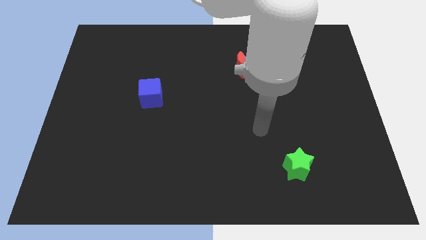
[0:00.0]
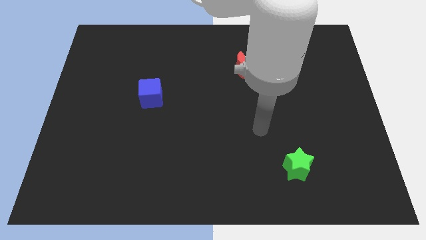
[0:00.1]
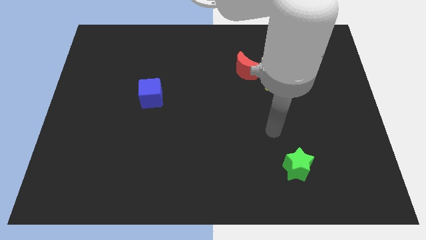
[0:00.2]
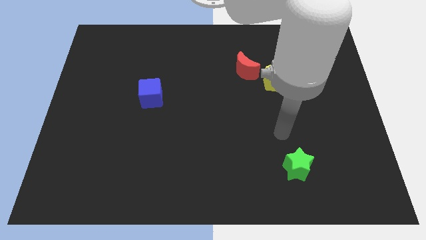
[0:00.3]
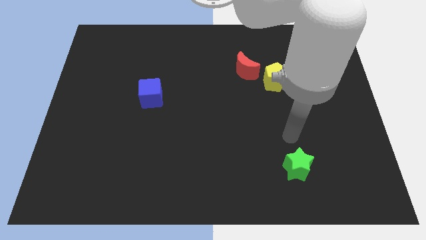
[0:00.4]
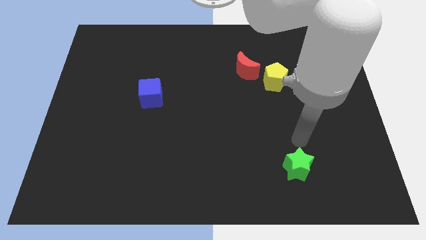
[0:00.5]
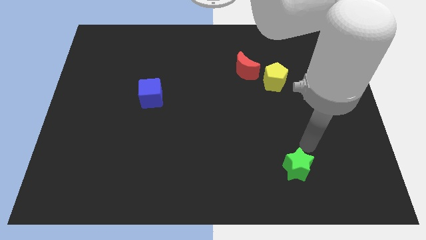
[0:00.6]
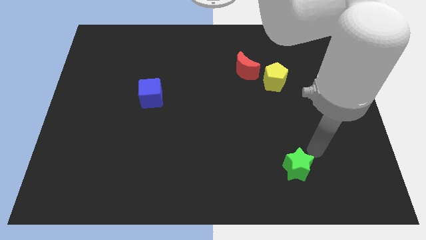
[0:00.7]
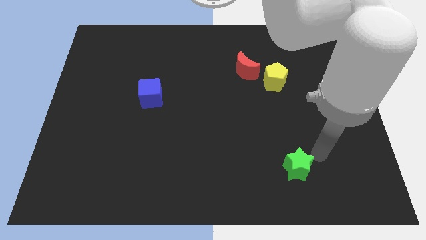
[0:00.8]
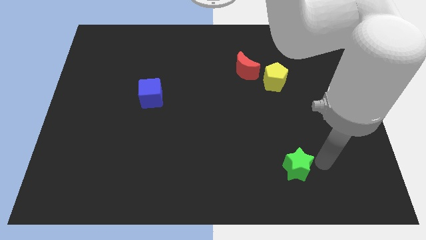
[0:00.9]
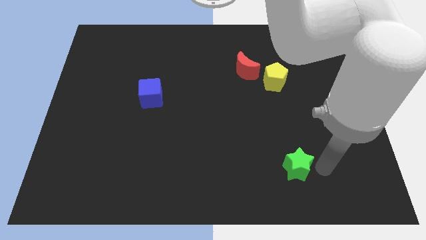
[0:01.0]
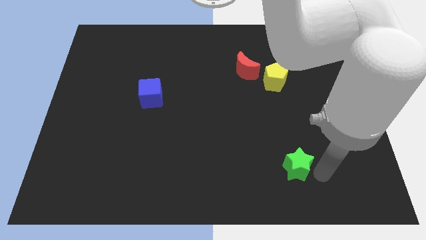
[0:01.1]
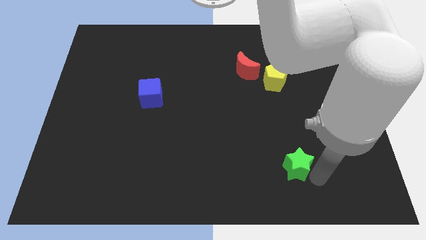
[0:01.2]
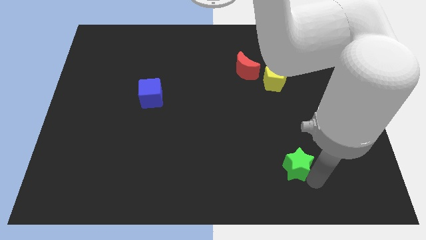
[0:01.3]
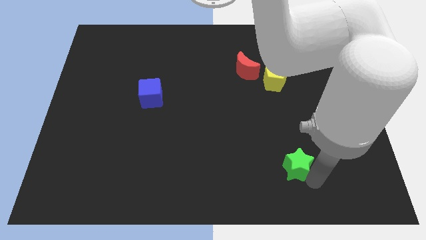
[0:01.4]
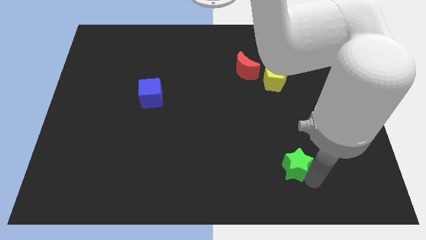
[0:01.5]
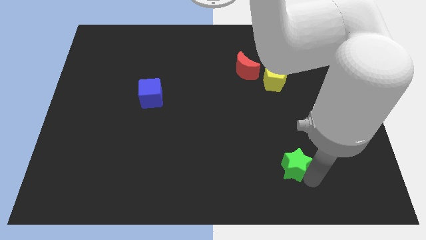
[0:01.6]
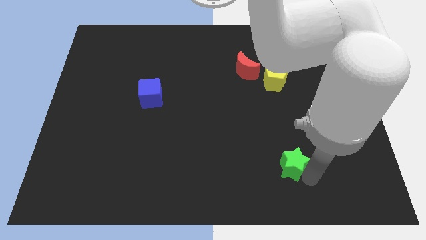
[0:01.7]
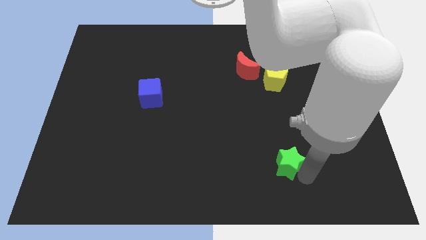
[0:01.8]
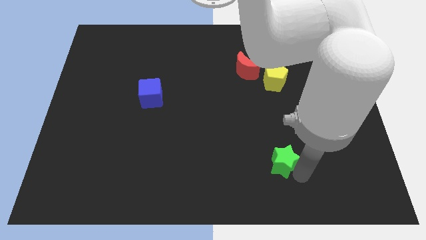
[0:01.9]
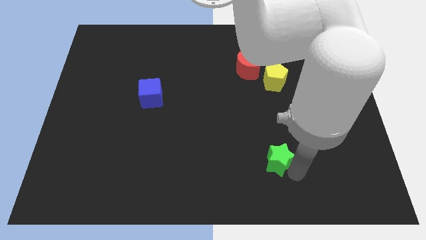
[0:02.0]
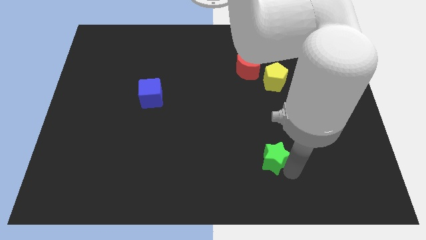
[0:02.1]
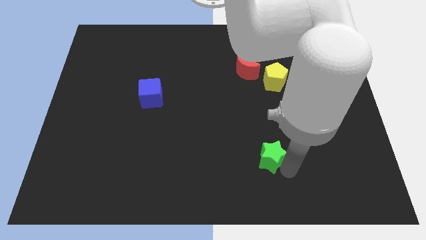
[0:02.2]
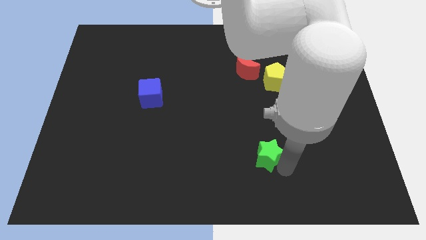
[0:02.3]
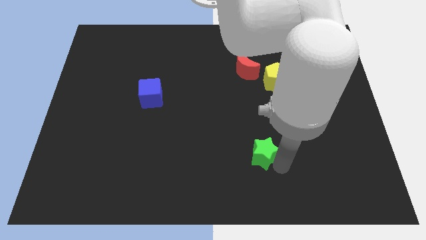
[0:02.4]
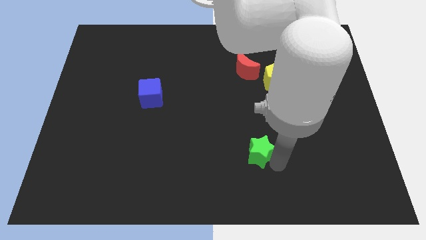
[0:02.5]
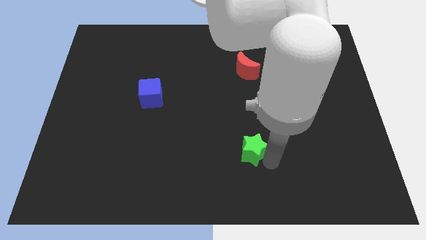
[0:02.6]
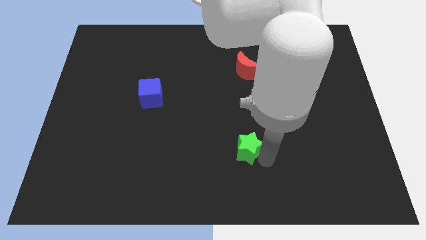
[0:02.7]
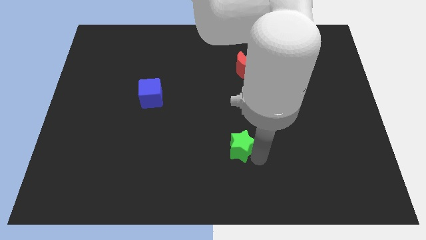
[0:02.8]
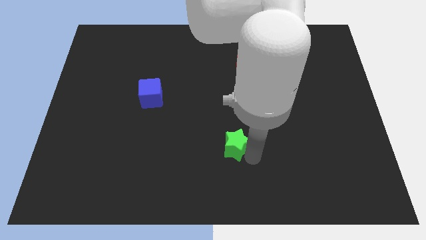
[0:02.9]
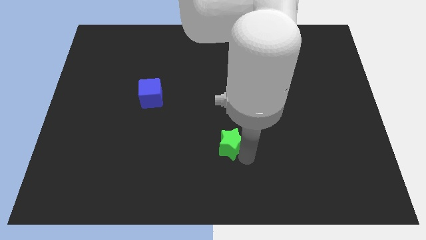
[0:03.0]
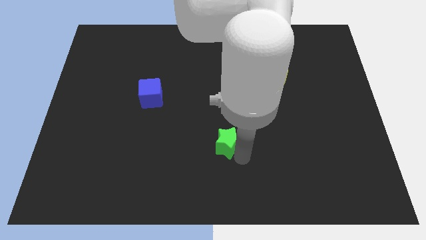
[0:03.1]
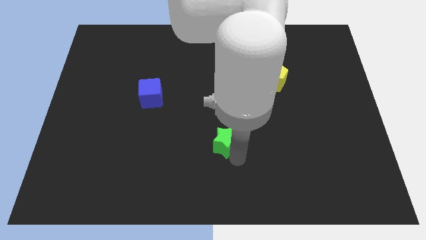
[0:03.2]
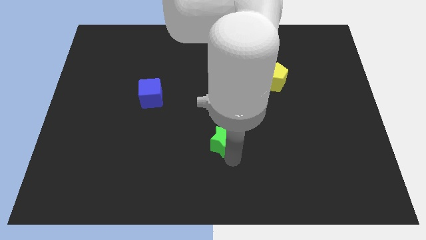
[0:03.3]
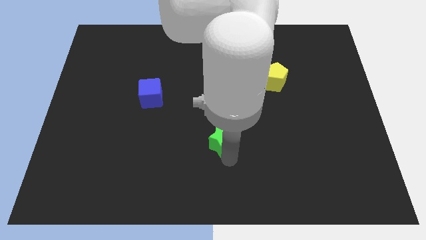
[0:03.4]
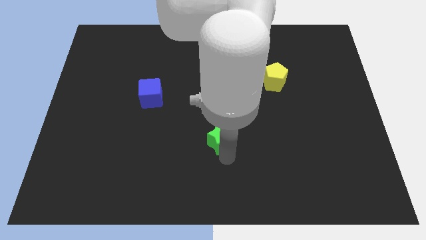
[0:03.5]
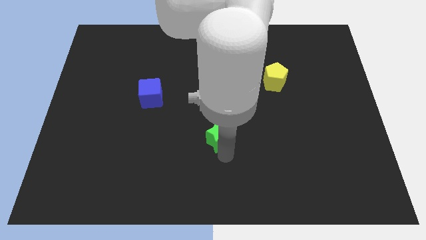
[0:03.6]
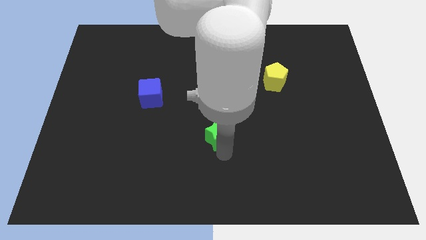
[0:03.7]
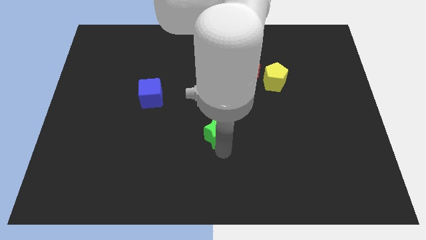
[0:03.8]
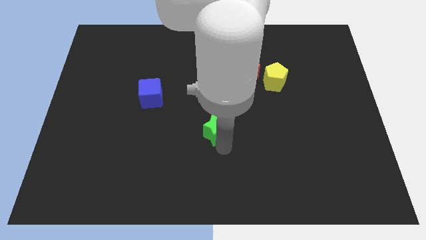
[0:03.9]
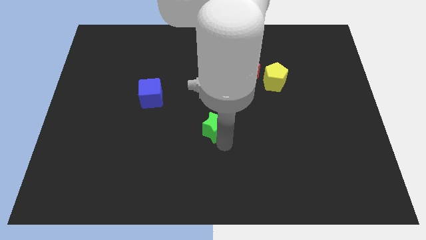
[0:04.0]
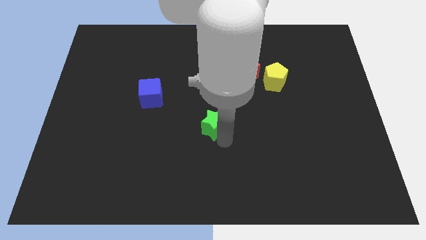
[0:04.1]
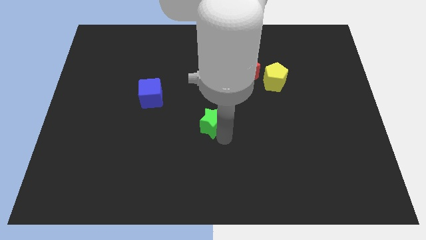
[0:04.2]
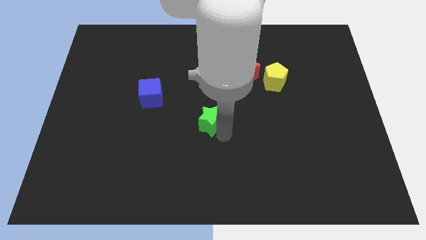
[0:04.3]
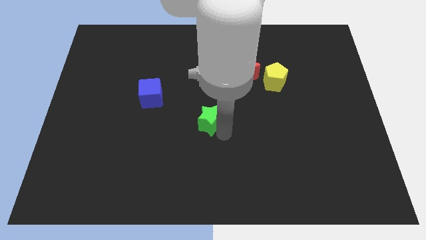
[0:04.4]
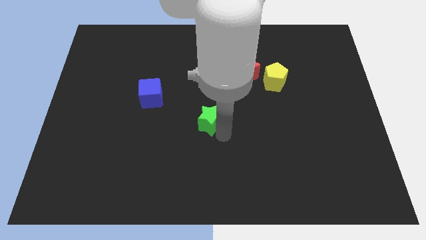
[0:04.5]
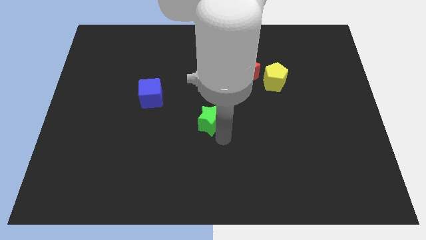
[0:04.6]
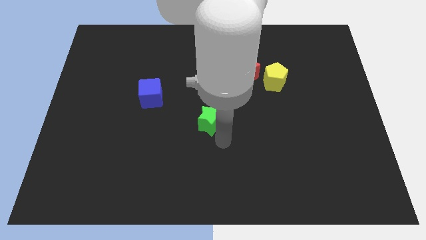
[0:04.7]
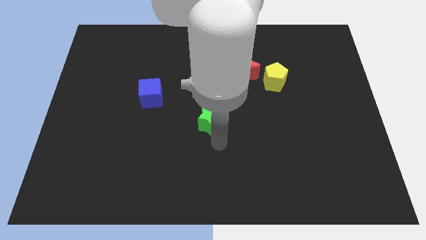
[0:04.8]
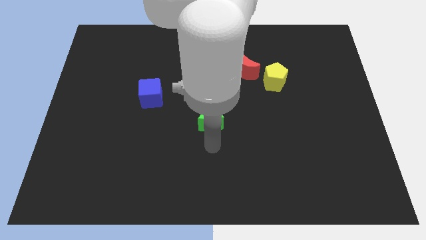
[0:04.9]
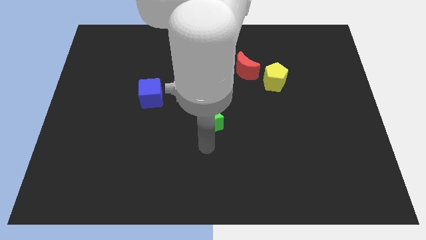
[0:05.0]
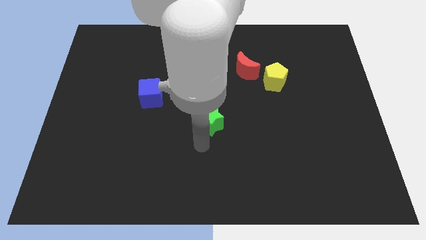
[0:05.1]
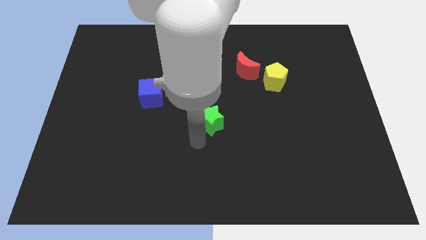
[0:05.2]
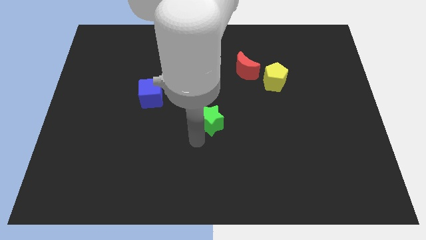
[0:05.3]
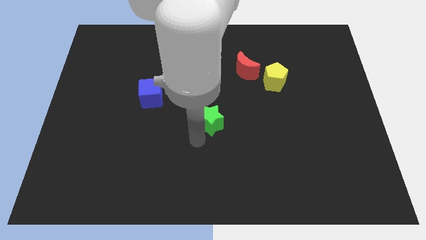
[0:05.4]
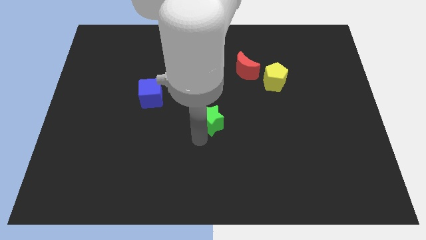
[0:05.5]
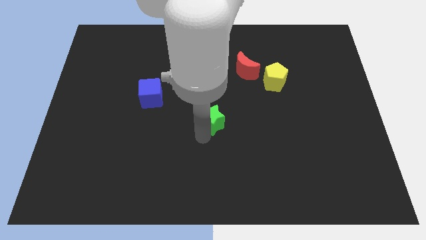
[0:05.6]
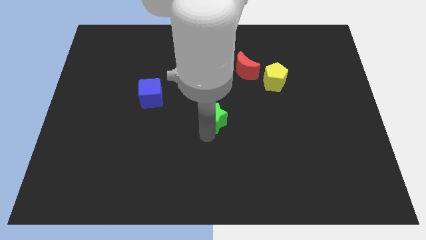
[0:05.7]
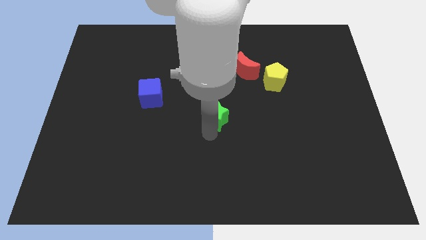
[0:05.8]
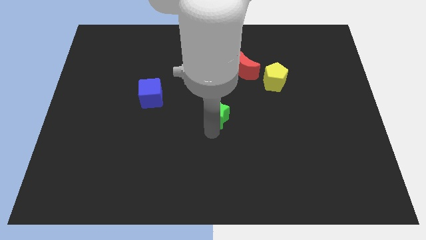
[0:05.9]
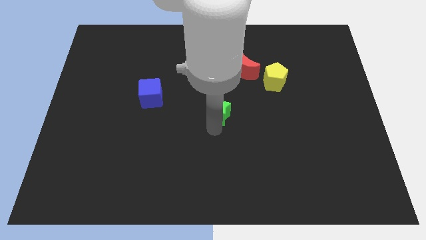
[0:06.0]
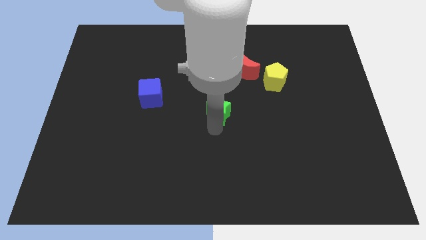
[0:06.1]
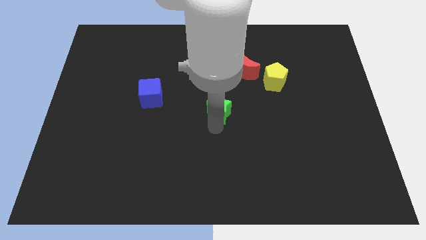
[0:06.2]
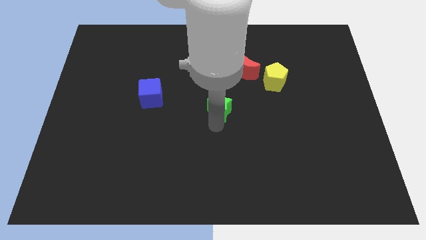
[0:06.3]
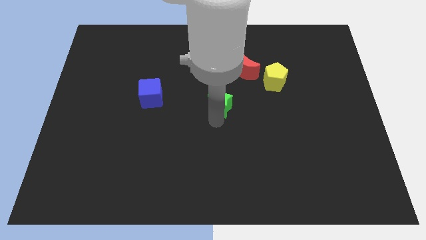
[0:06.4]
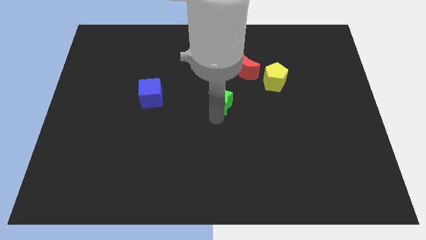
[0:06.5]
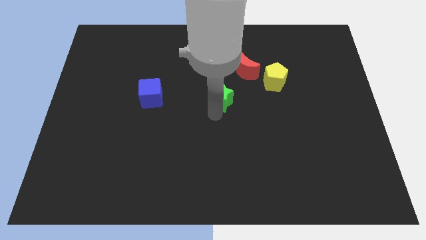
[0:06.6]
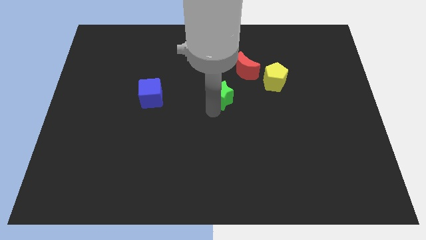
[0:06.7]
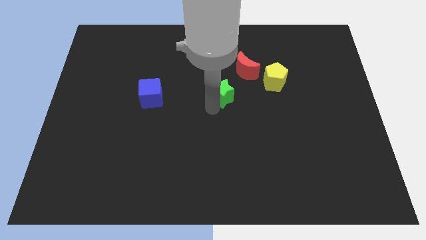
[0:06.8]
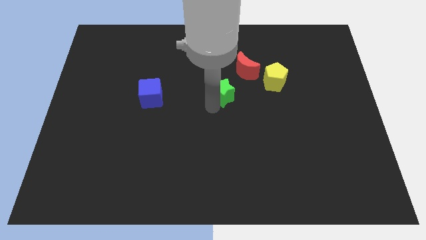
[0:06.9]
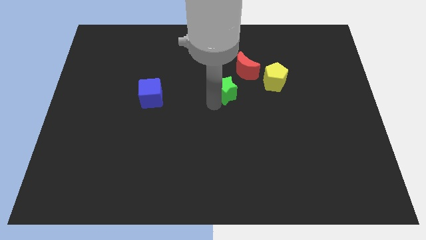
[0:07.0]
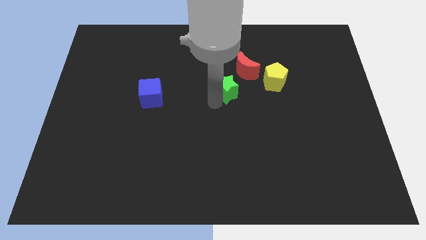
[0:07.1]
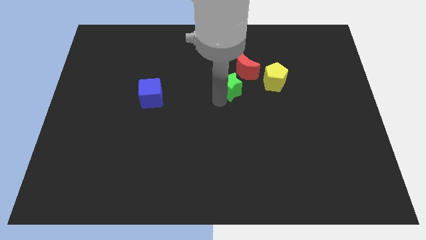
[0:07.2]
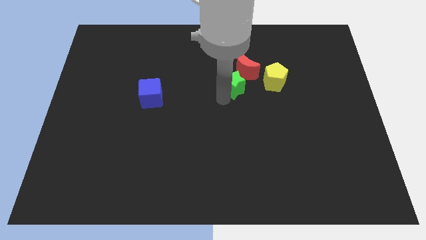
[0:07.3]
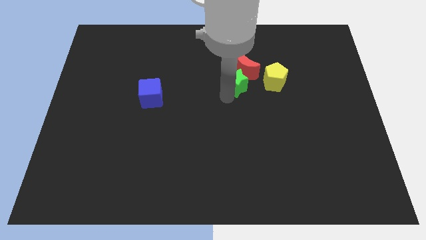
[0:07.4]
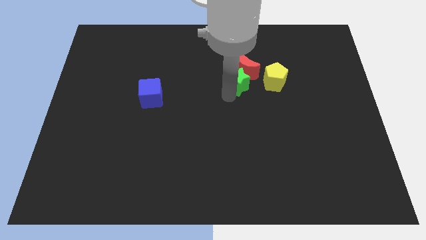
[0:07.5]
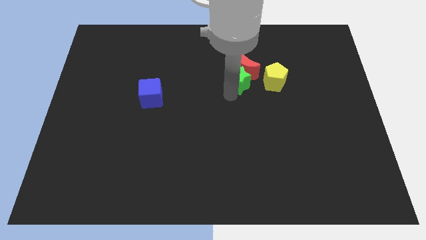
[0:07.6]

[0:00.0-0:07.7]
slide the star close to the moon

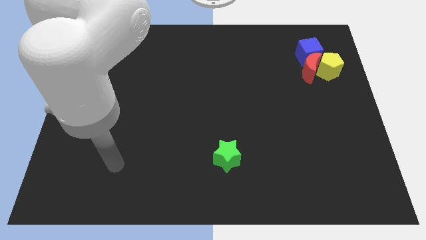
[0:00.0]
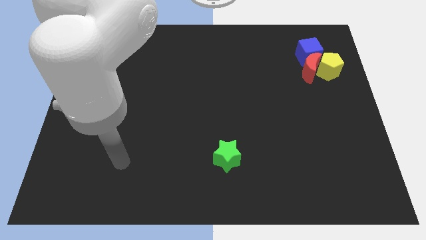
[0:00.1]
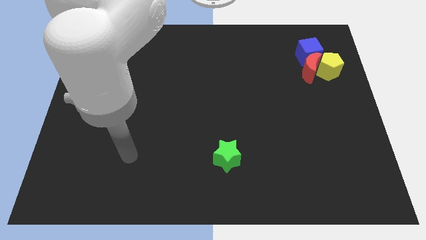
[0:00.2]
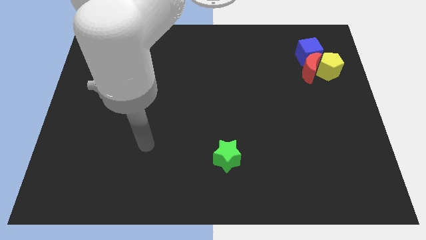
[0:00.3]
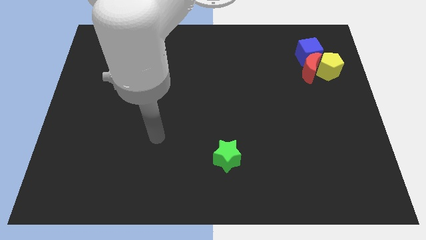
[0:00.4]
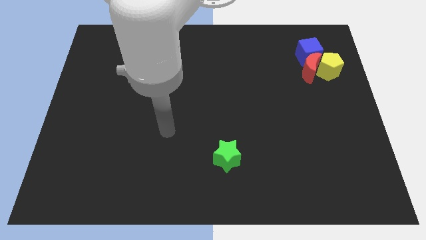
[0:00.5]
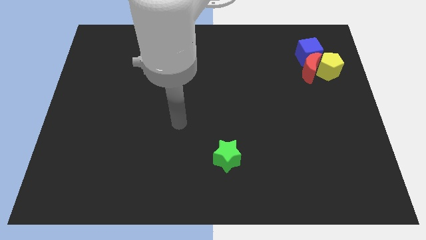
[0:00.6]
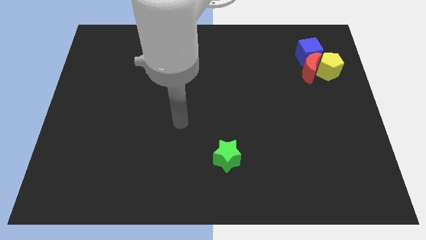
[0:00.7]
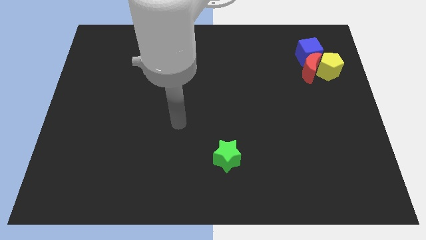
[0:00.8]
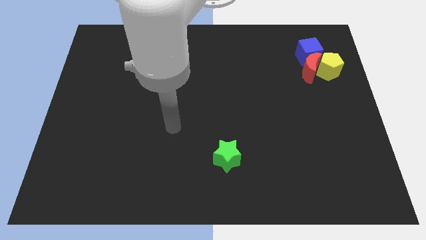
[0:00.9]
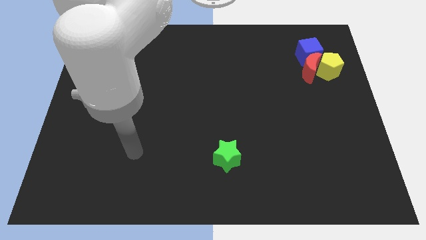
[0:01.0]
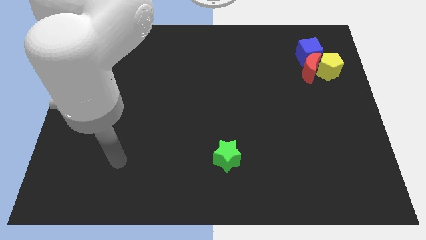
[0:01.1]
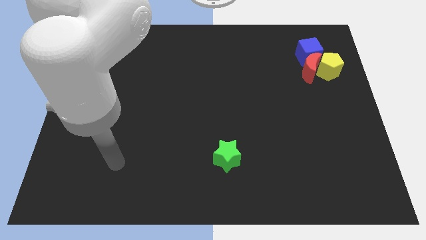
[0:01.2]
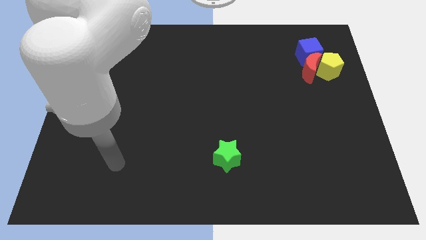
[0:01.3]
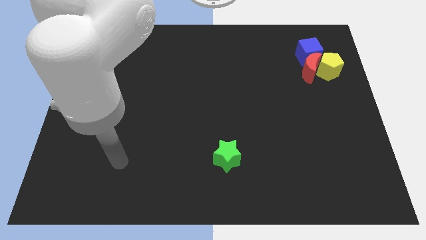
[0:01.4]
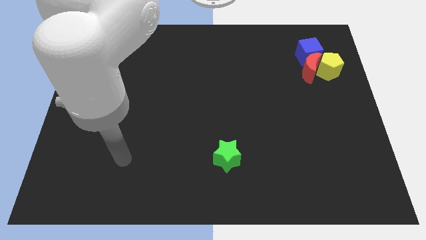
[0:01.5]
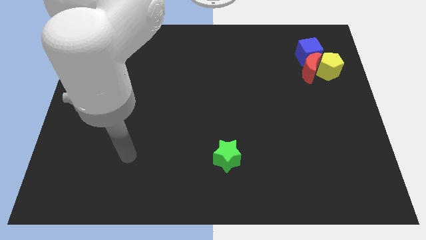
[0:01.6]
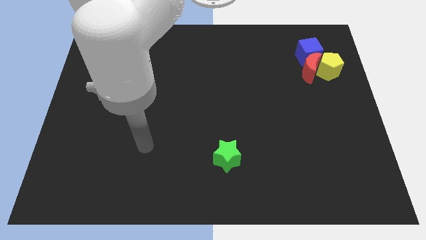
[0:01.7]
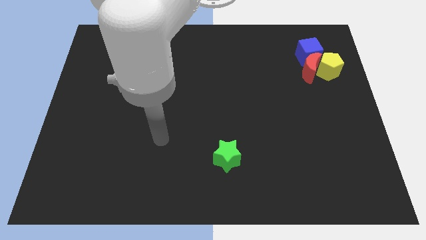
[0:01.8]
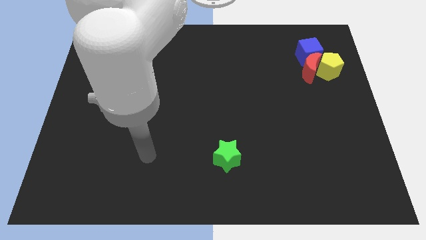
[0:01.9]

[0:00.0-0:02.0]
move the red moon towards the green star
